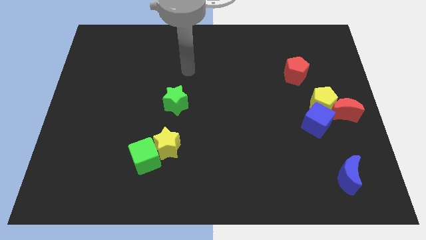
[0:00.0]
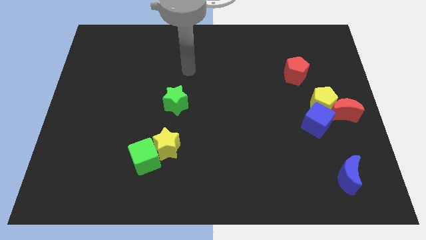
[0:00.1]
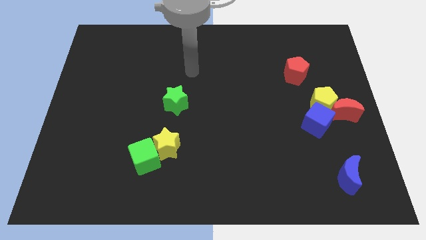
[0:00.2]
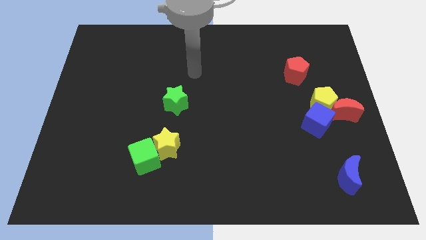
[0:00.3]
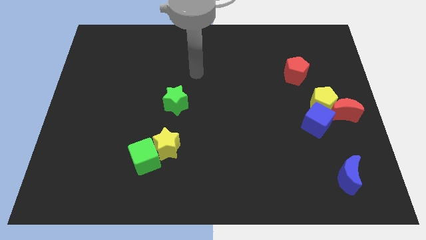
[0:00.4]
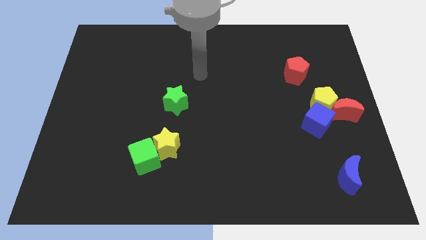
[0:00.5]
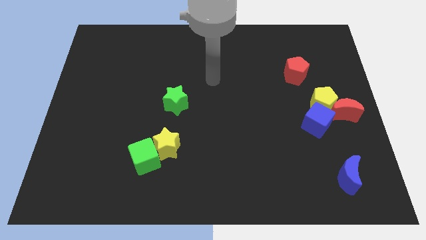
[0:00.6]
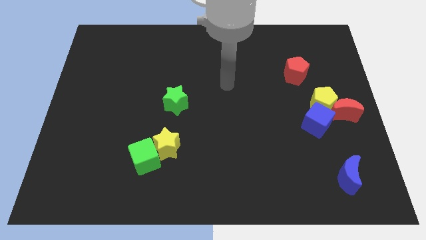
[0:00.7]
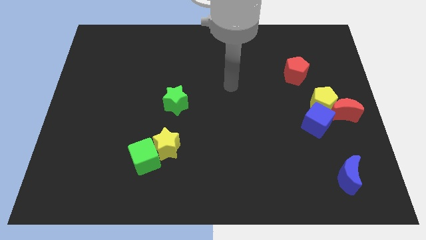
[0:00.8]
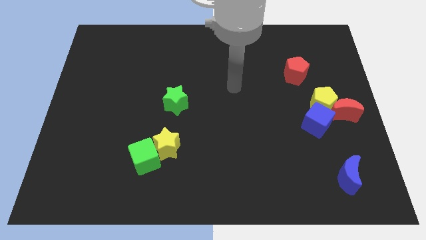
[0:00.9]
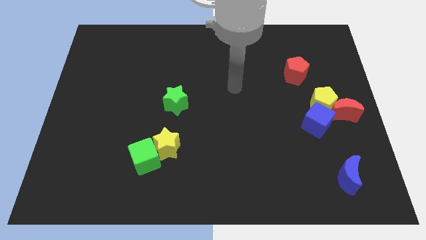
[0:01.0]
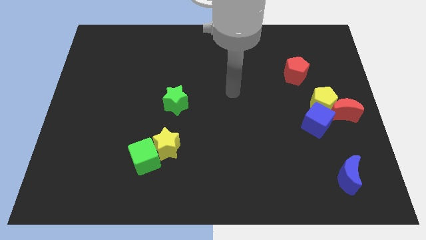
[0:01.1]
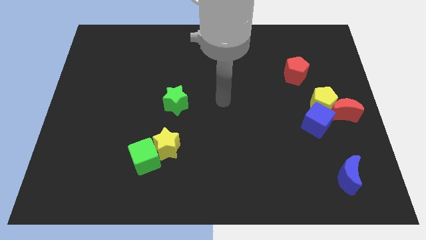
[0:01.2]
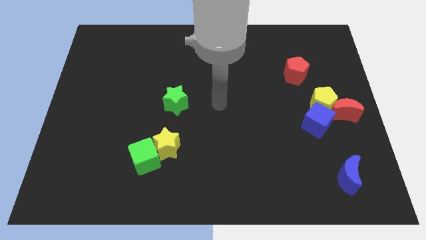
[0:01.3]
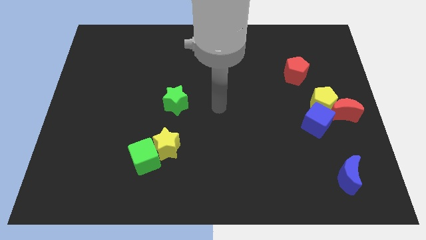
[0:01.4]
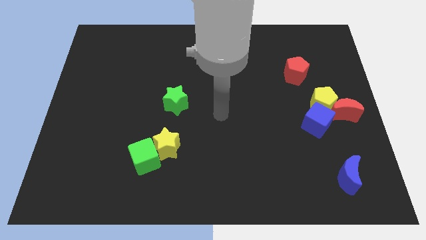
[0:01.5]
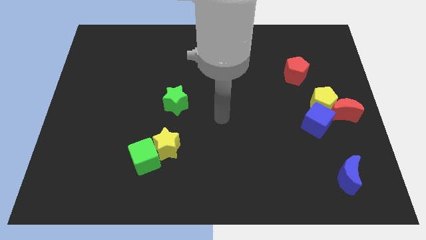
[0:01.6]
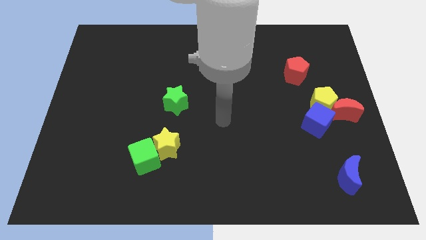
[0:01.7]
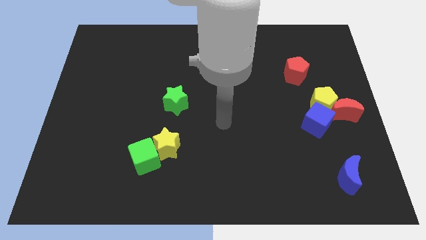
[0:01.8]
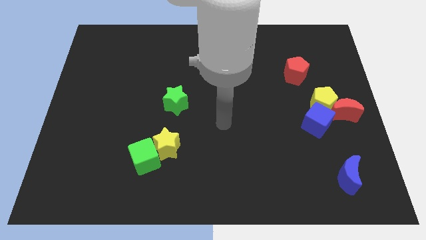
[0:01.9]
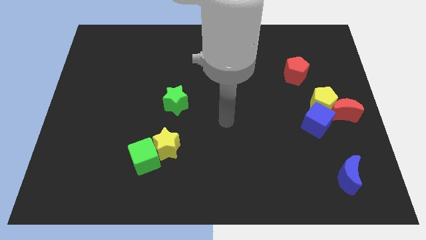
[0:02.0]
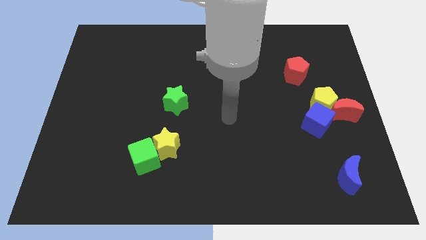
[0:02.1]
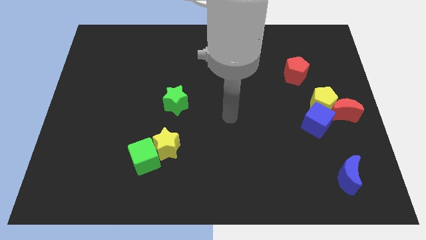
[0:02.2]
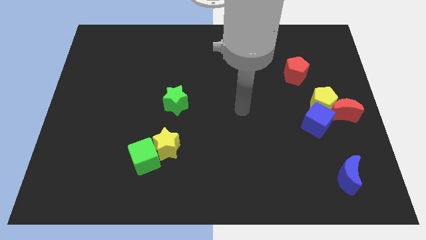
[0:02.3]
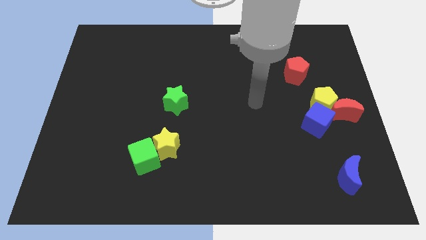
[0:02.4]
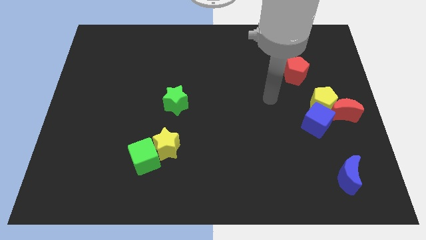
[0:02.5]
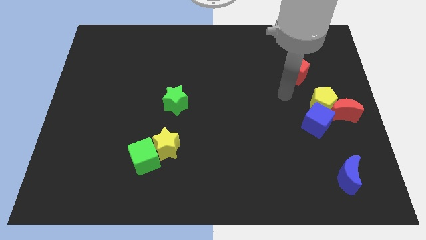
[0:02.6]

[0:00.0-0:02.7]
place your arm to the bottom of red pentagon

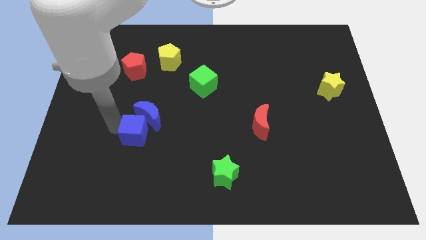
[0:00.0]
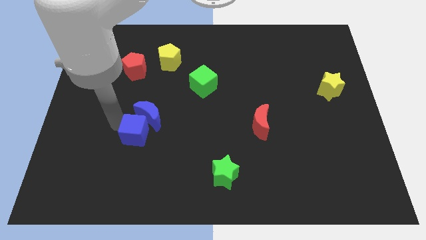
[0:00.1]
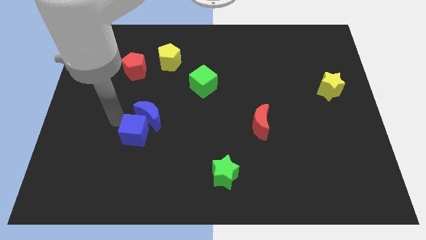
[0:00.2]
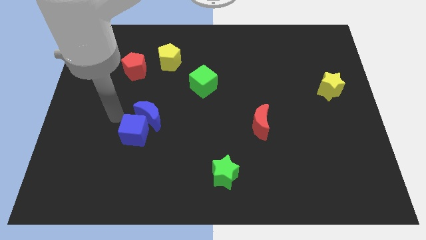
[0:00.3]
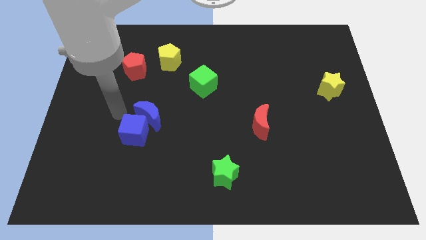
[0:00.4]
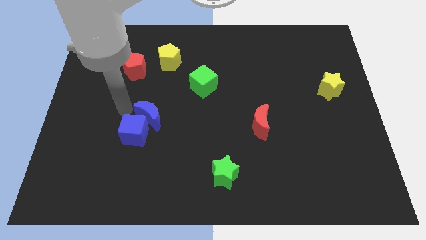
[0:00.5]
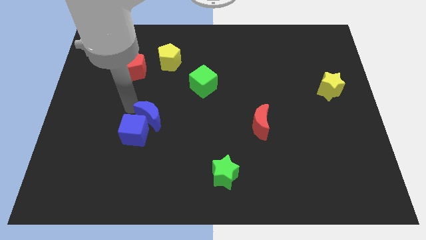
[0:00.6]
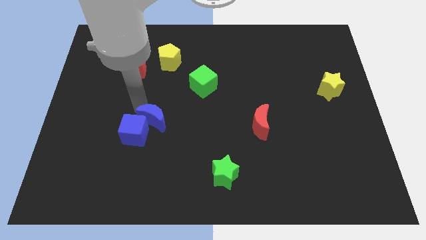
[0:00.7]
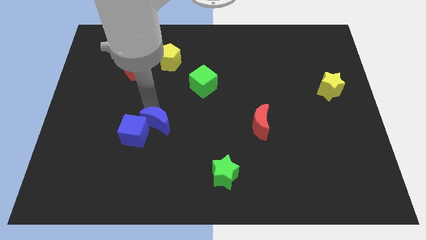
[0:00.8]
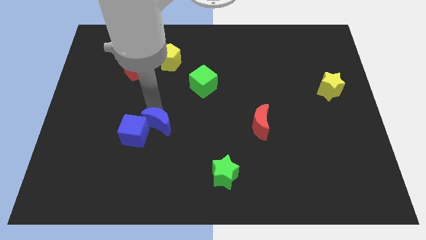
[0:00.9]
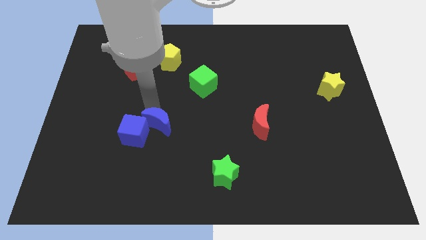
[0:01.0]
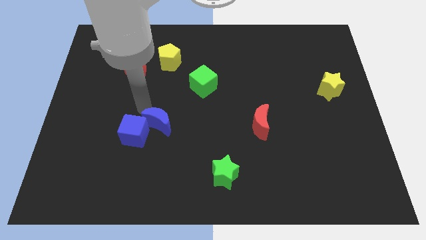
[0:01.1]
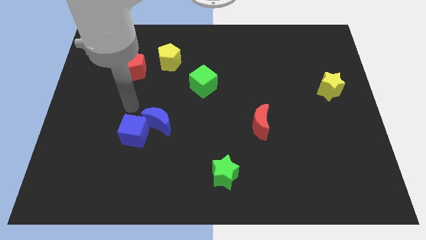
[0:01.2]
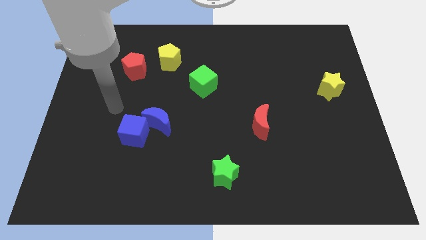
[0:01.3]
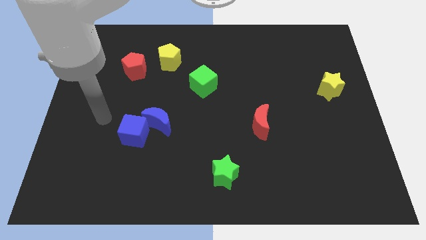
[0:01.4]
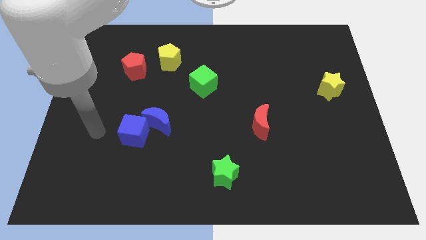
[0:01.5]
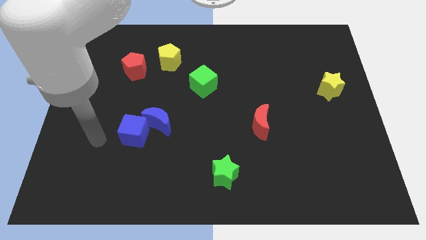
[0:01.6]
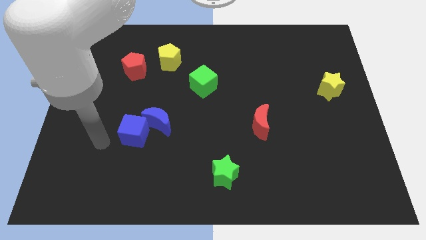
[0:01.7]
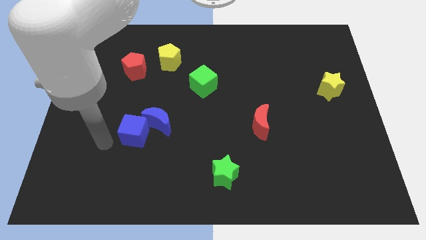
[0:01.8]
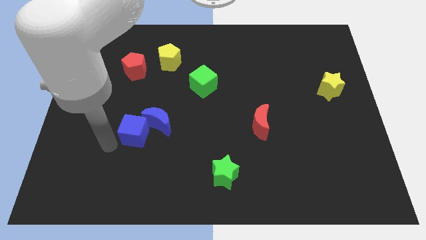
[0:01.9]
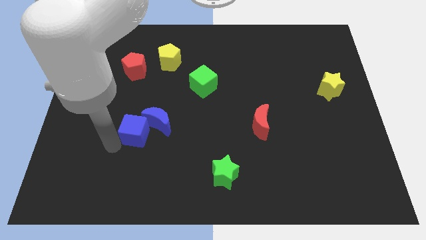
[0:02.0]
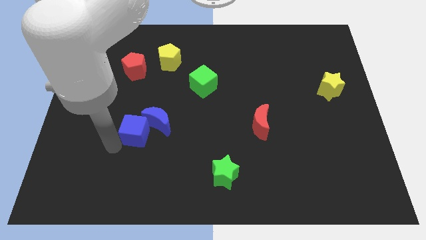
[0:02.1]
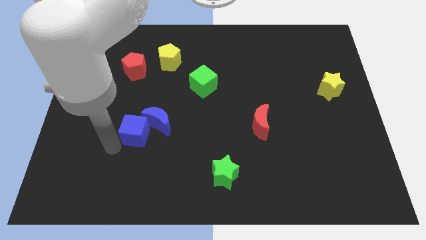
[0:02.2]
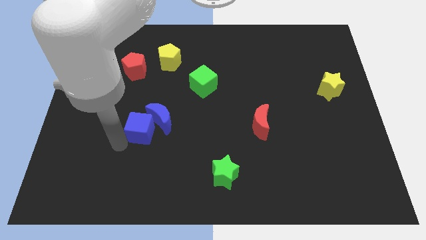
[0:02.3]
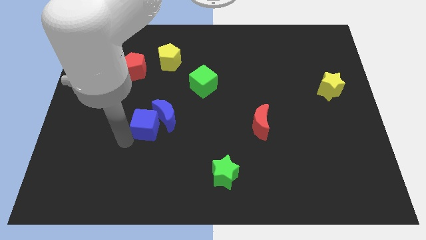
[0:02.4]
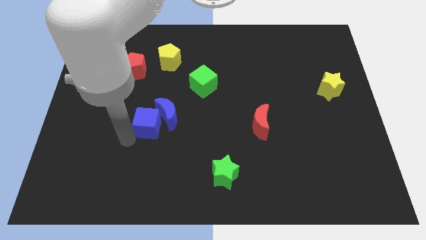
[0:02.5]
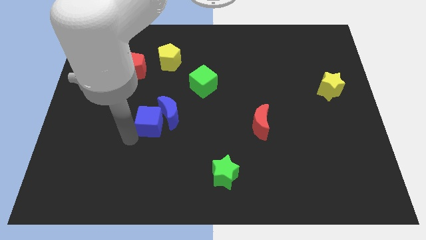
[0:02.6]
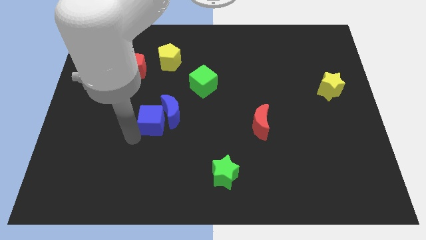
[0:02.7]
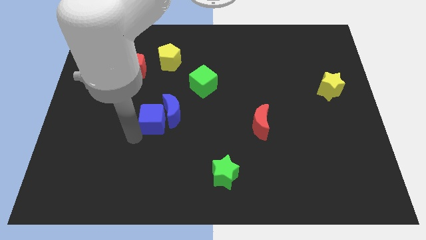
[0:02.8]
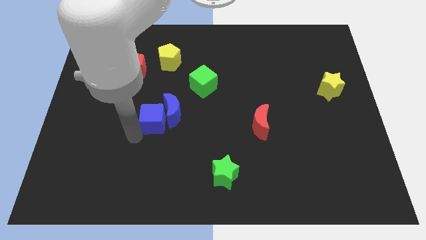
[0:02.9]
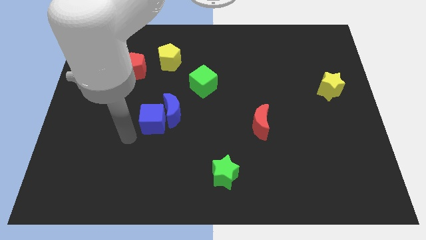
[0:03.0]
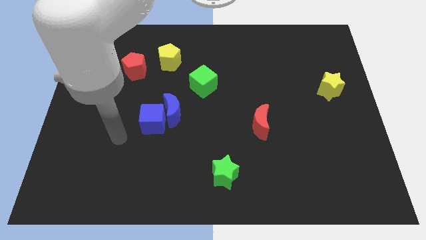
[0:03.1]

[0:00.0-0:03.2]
move the blue cube along with the blue crescent to the left diagonally green cube from bottom

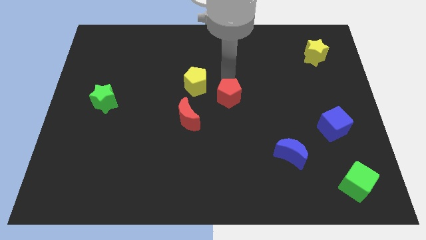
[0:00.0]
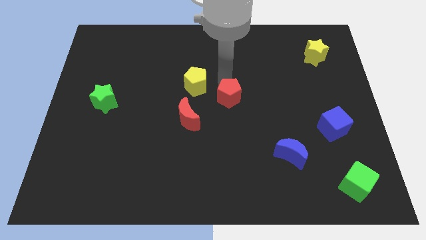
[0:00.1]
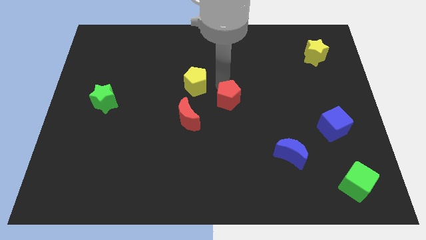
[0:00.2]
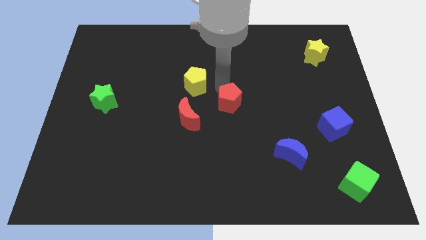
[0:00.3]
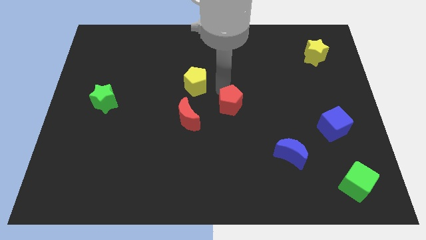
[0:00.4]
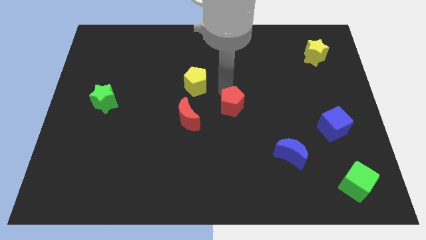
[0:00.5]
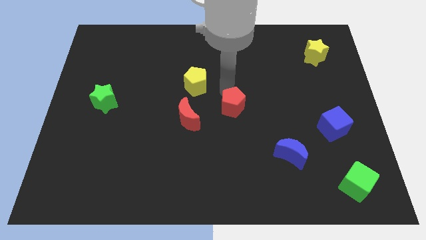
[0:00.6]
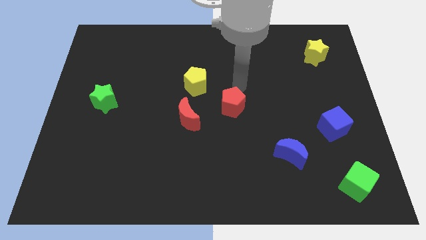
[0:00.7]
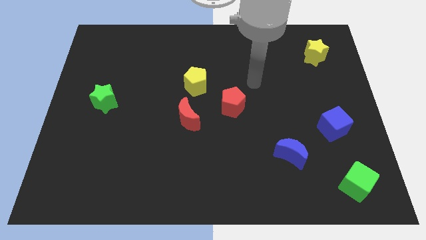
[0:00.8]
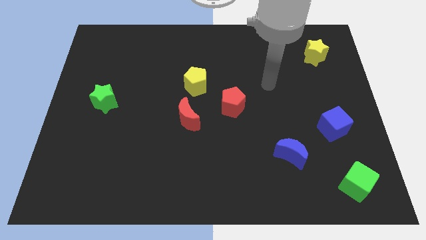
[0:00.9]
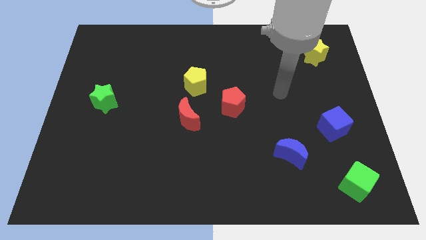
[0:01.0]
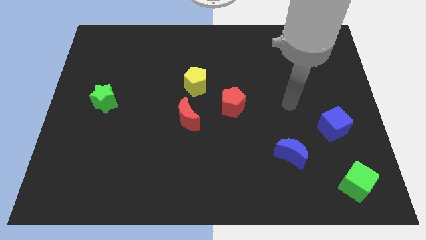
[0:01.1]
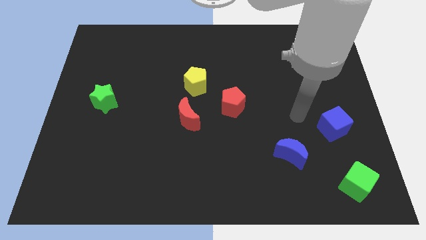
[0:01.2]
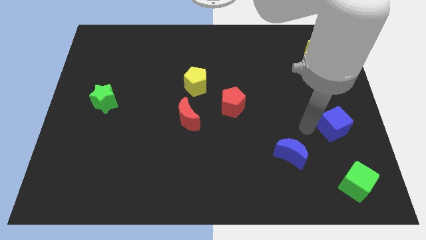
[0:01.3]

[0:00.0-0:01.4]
place red pentagon to the bottom right of the yellow pentagon

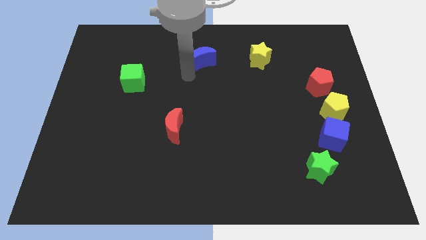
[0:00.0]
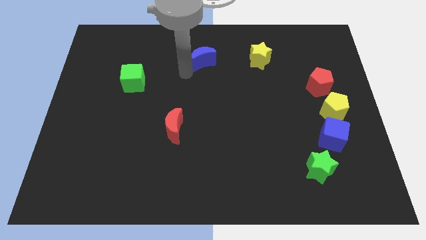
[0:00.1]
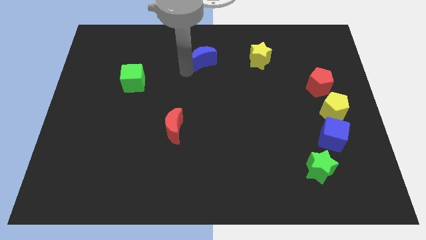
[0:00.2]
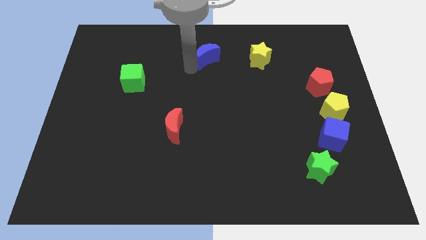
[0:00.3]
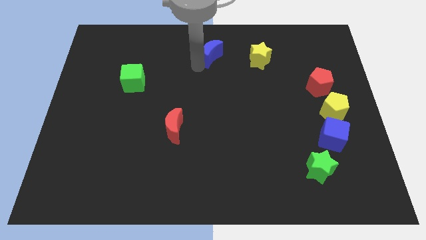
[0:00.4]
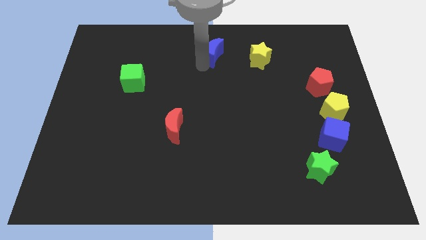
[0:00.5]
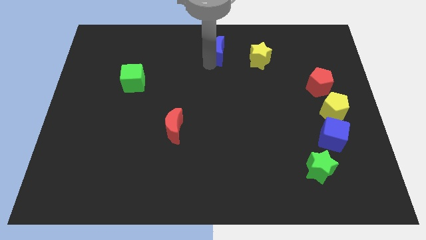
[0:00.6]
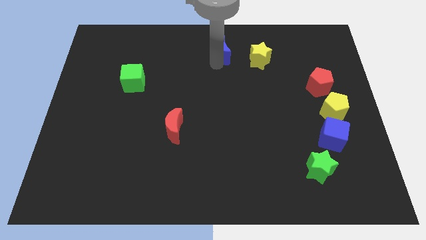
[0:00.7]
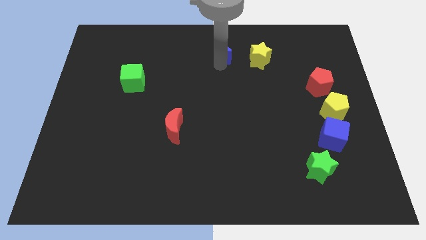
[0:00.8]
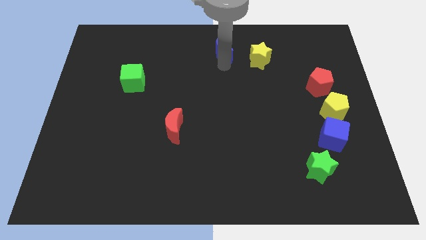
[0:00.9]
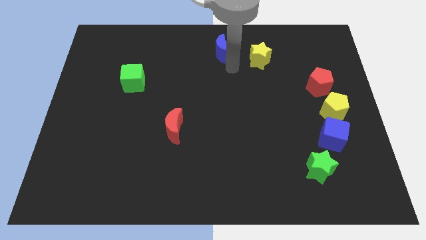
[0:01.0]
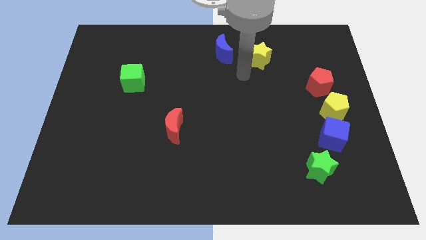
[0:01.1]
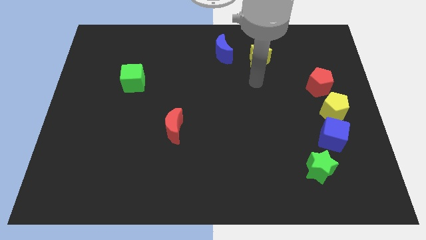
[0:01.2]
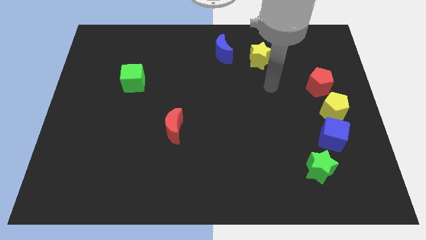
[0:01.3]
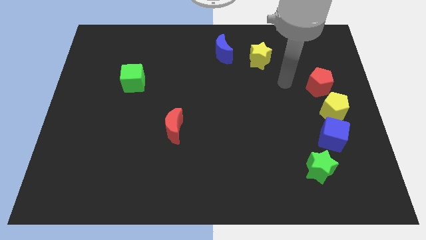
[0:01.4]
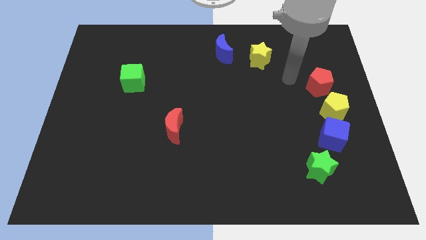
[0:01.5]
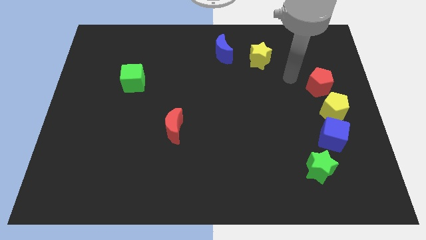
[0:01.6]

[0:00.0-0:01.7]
move your arm towards the yellow star
